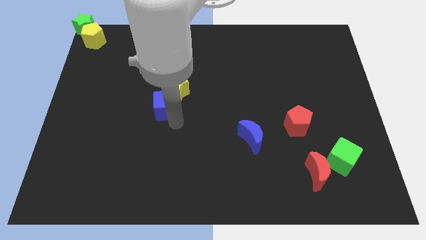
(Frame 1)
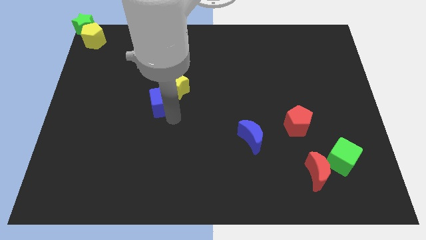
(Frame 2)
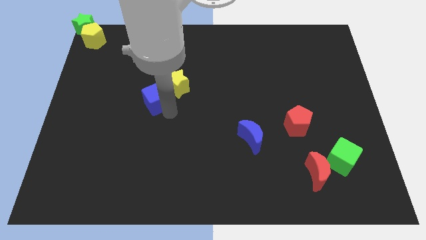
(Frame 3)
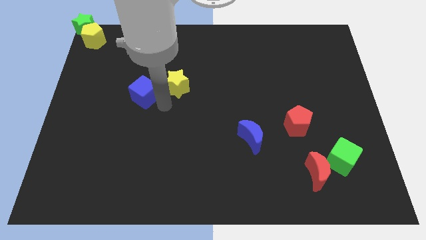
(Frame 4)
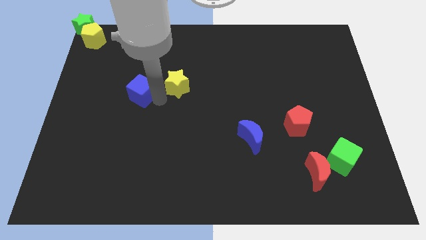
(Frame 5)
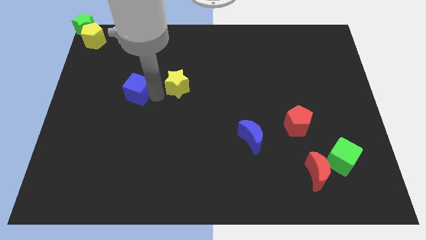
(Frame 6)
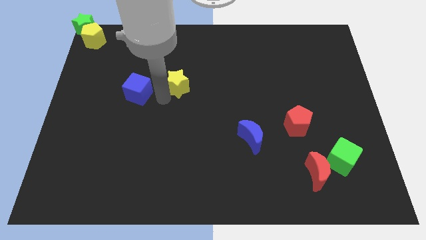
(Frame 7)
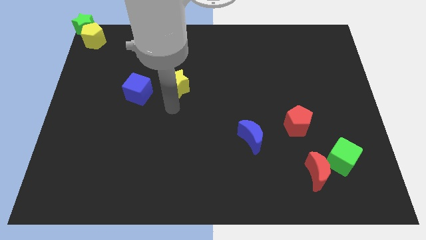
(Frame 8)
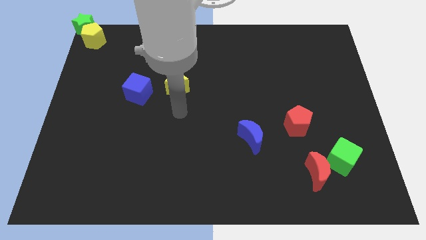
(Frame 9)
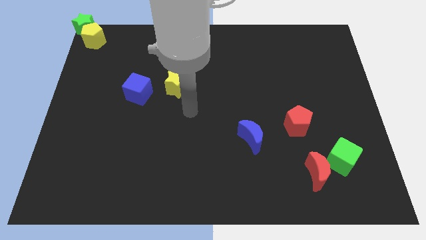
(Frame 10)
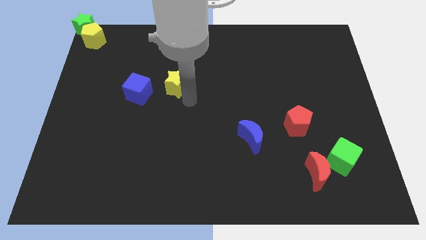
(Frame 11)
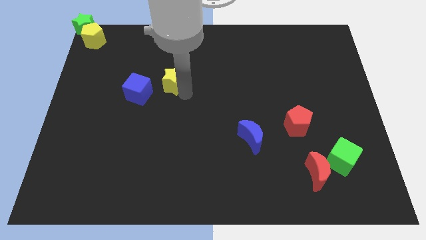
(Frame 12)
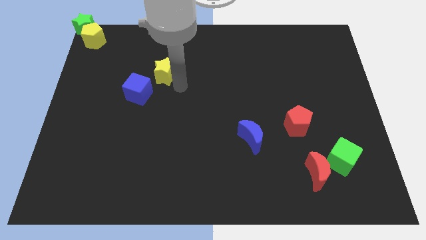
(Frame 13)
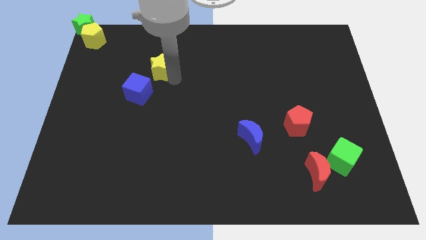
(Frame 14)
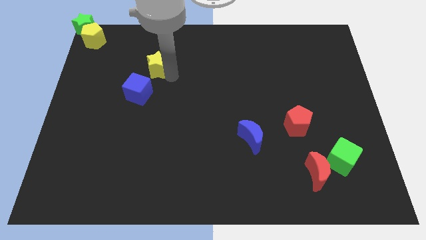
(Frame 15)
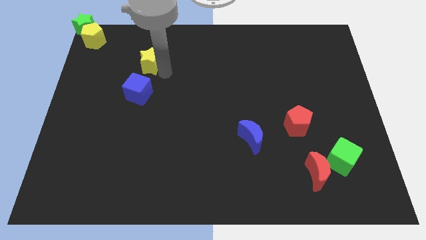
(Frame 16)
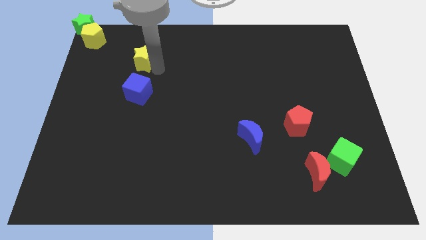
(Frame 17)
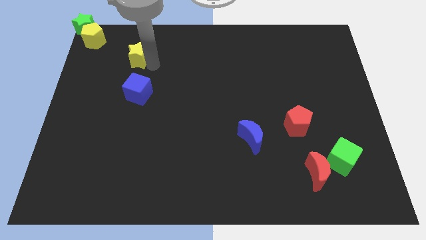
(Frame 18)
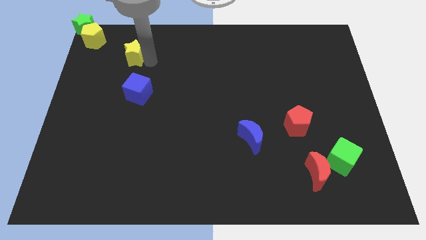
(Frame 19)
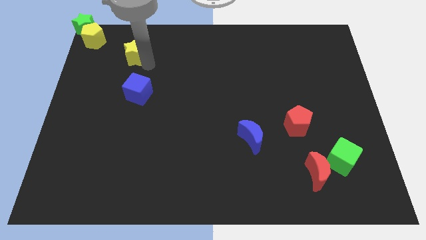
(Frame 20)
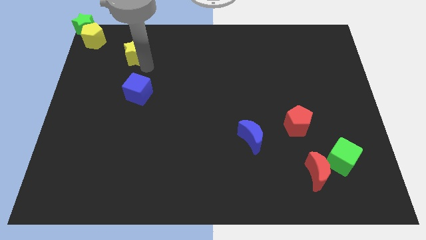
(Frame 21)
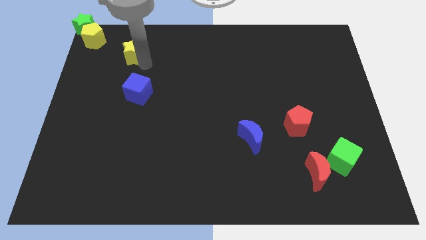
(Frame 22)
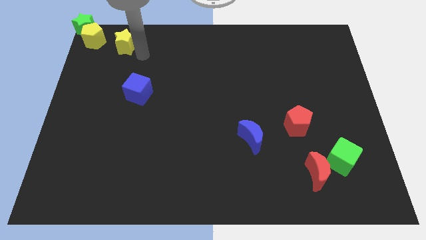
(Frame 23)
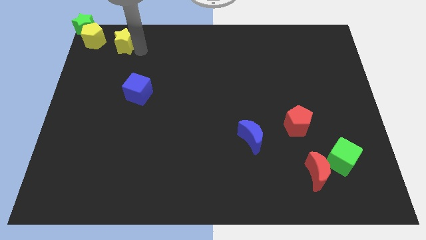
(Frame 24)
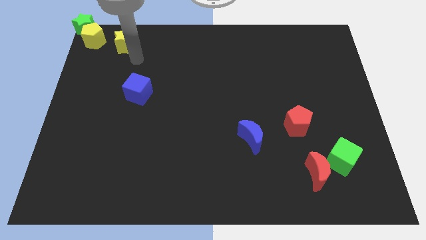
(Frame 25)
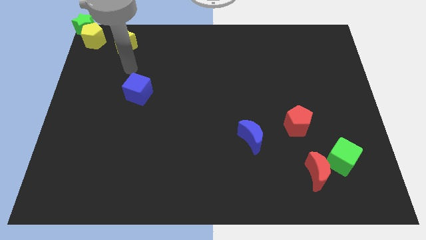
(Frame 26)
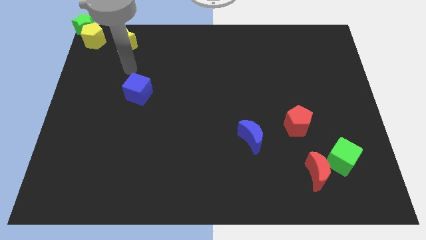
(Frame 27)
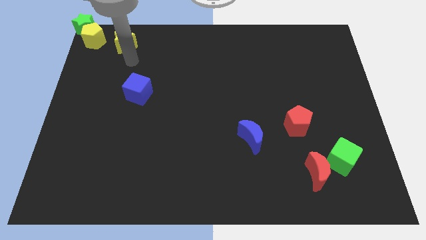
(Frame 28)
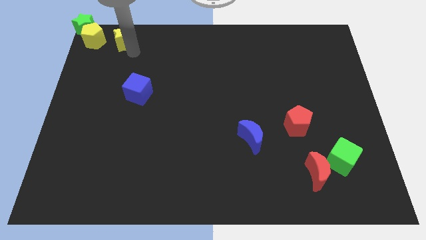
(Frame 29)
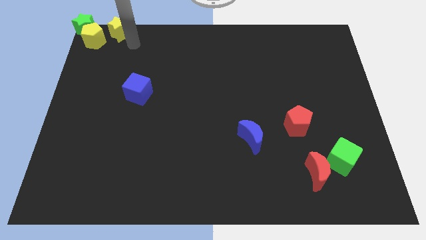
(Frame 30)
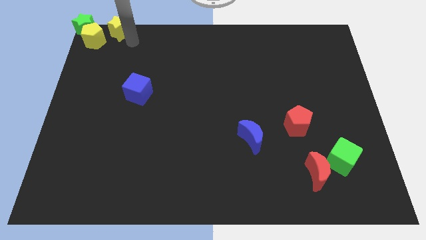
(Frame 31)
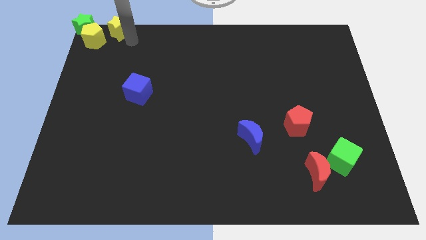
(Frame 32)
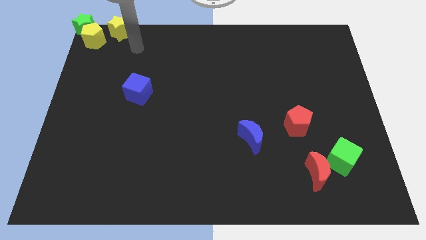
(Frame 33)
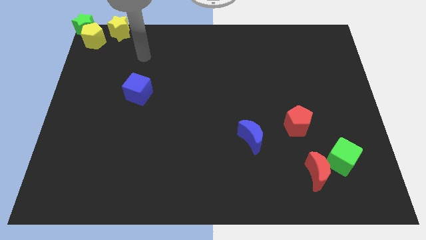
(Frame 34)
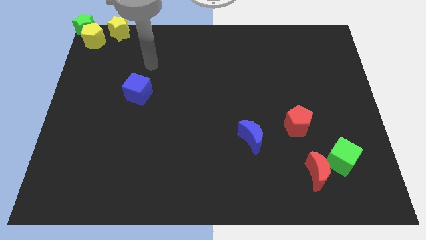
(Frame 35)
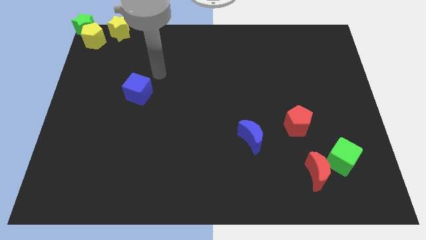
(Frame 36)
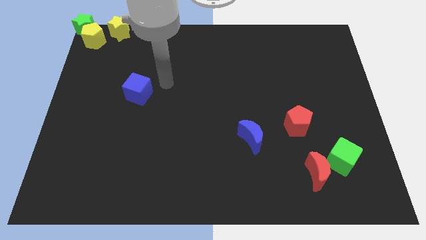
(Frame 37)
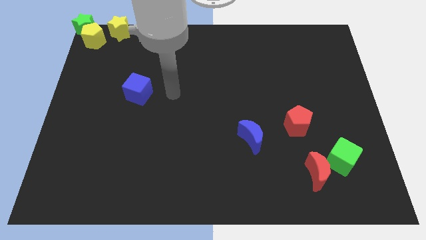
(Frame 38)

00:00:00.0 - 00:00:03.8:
place yellow star to the right of yellow pentagon

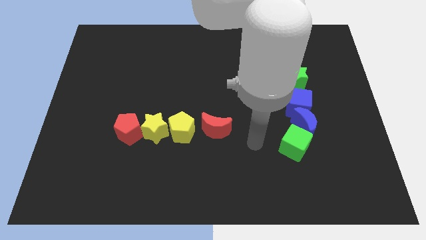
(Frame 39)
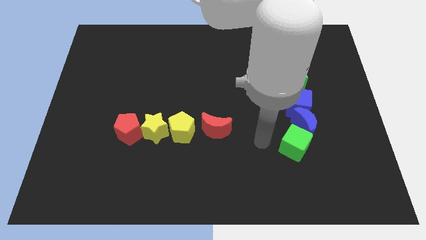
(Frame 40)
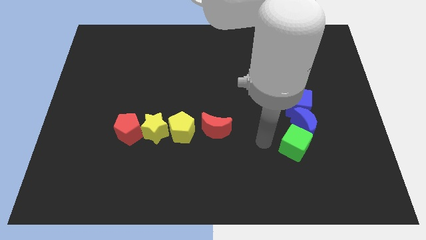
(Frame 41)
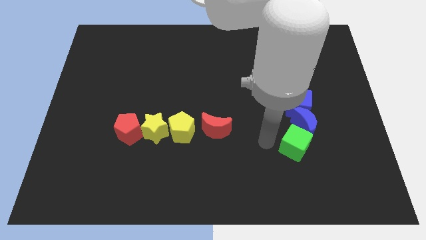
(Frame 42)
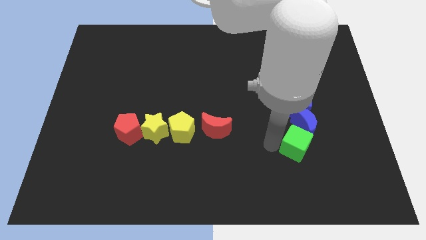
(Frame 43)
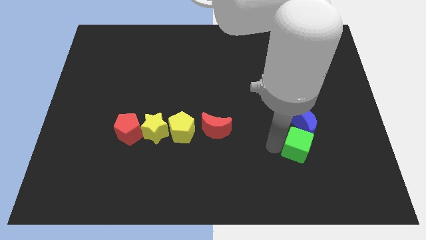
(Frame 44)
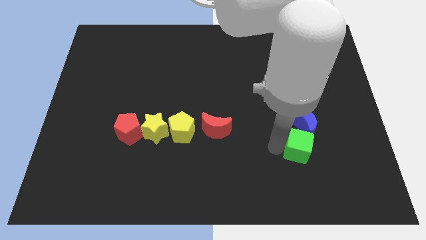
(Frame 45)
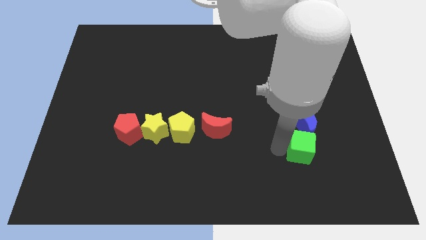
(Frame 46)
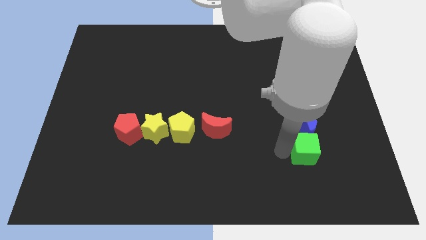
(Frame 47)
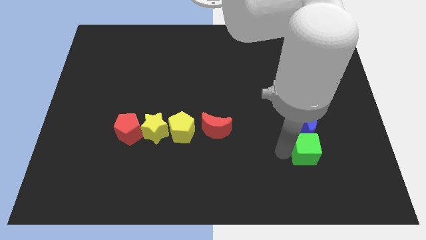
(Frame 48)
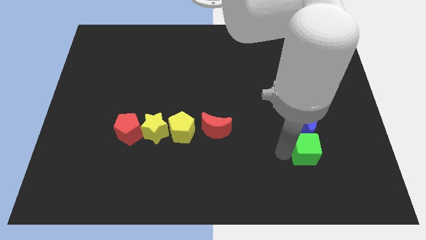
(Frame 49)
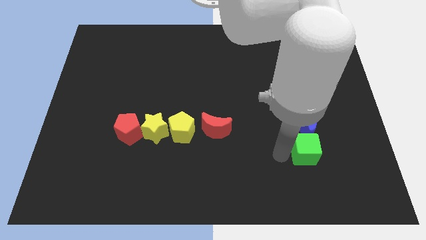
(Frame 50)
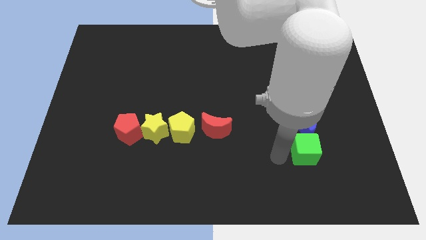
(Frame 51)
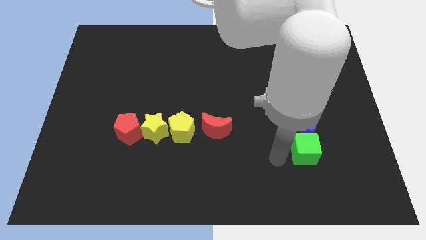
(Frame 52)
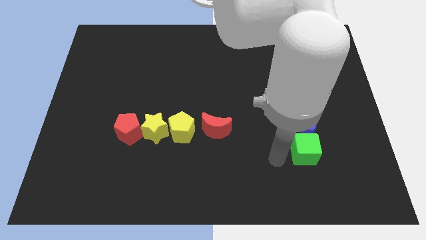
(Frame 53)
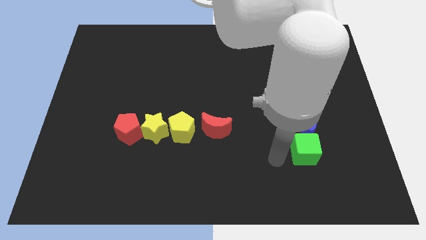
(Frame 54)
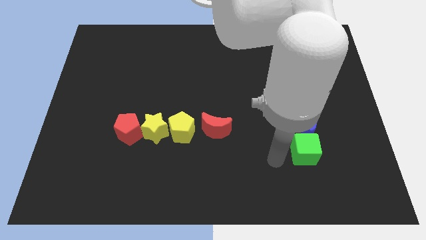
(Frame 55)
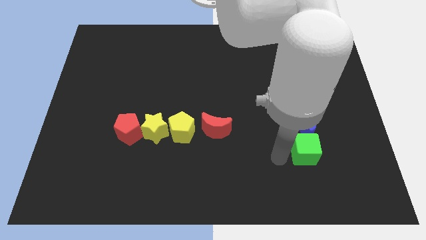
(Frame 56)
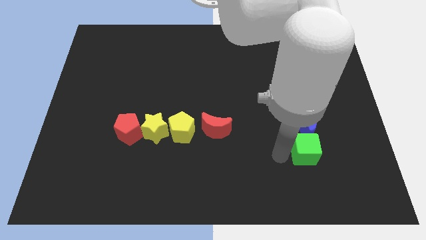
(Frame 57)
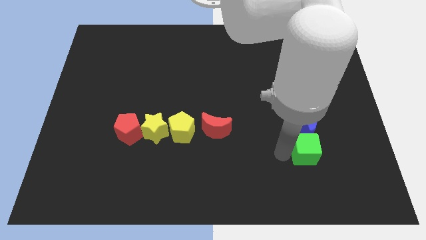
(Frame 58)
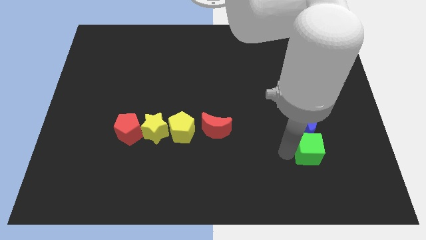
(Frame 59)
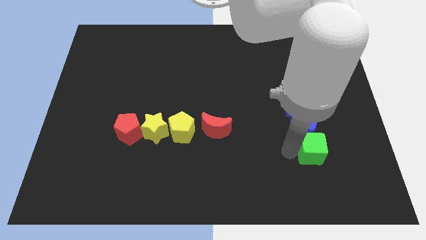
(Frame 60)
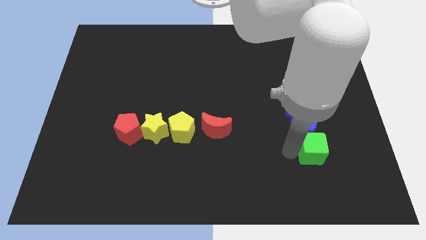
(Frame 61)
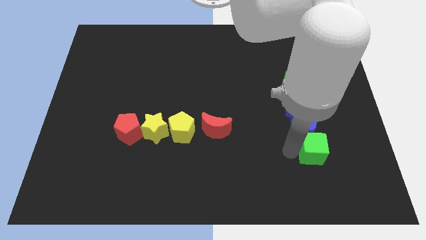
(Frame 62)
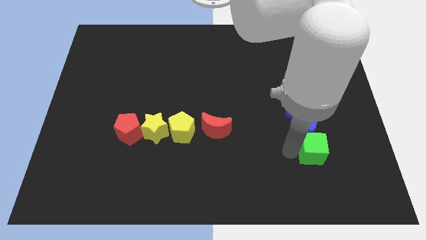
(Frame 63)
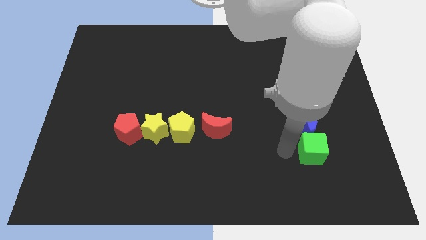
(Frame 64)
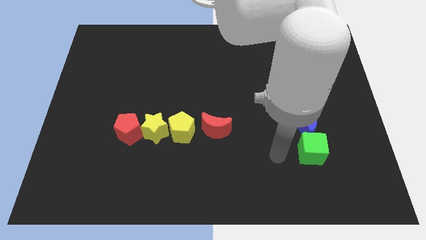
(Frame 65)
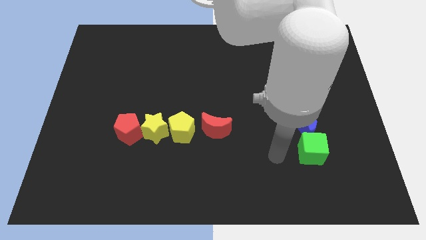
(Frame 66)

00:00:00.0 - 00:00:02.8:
move green cube slightly right

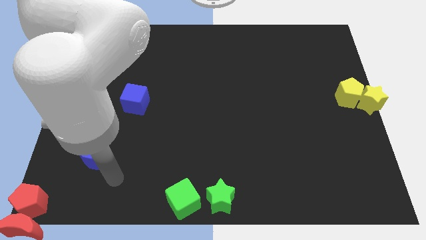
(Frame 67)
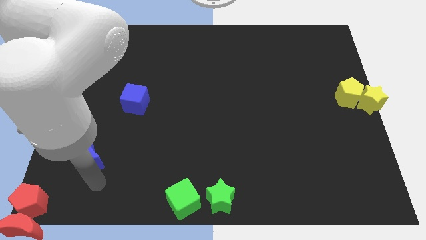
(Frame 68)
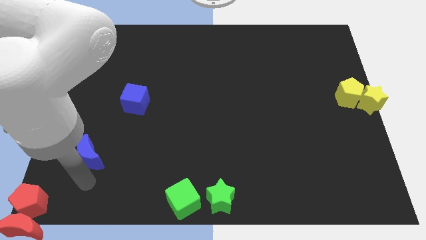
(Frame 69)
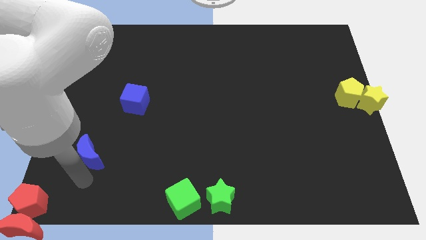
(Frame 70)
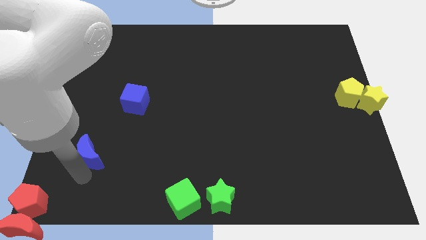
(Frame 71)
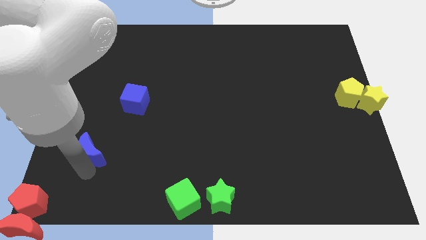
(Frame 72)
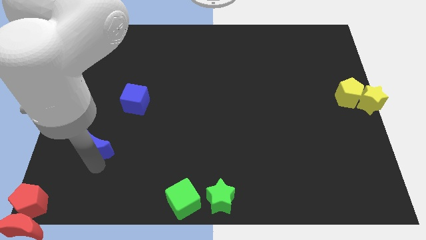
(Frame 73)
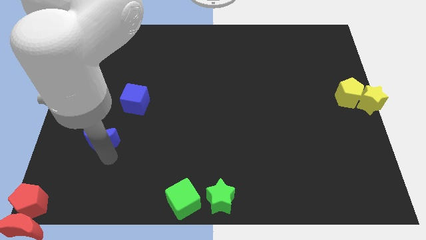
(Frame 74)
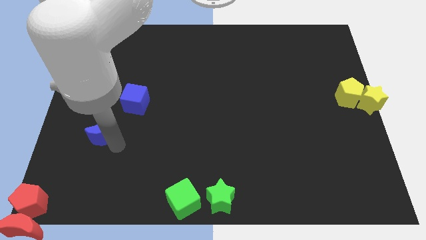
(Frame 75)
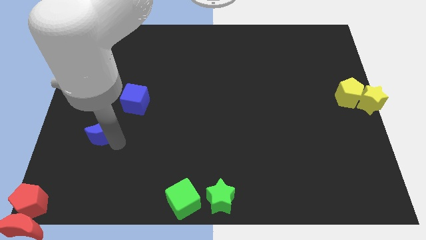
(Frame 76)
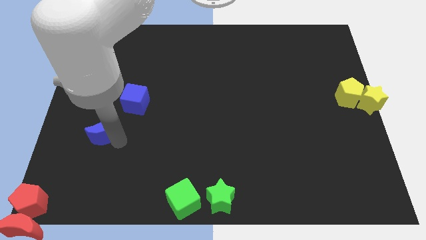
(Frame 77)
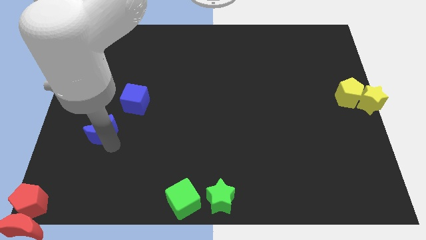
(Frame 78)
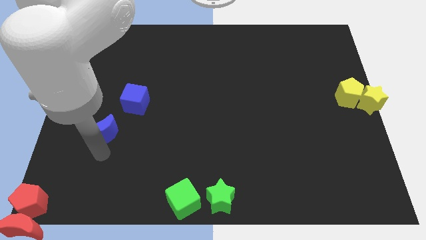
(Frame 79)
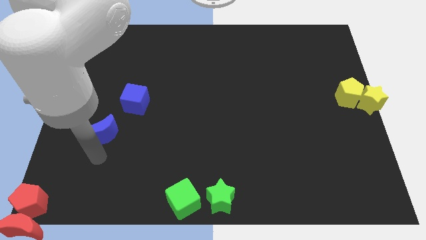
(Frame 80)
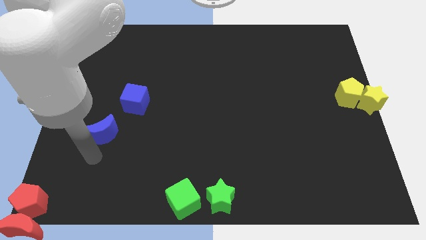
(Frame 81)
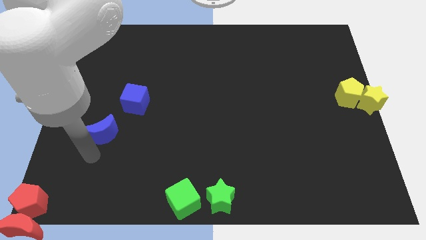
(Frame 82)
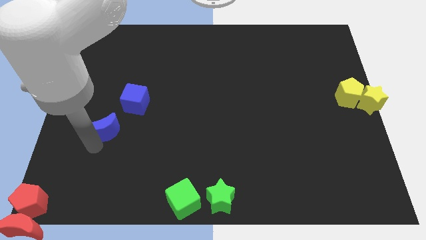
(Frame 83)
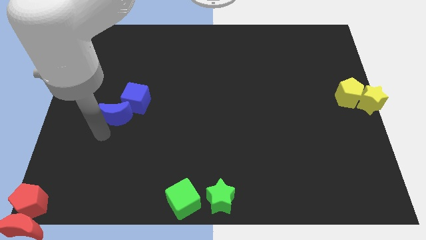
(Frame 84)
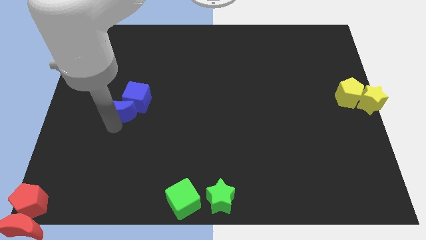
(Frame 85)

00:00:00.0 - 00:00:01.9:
move the blue moon to the bottom left side of the blue cube

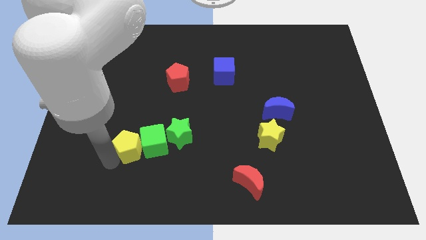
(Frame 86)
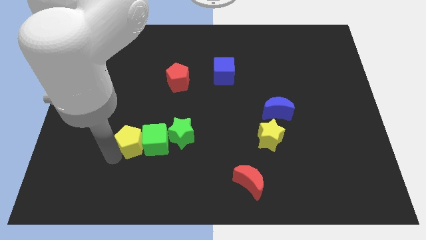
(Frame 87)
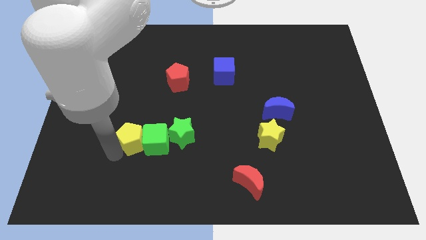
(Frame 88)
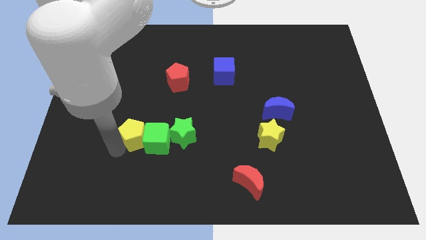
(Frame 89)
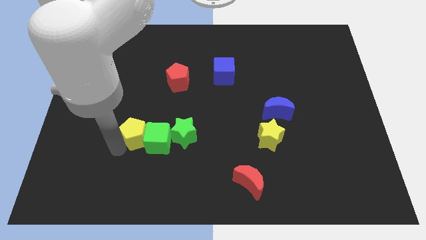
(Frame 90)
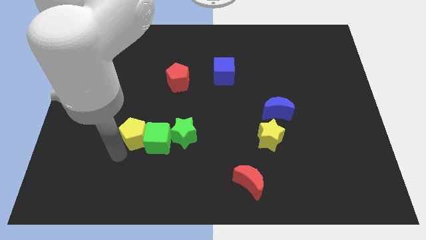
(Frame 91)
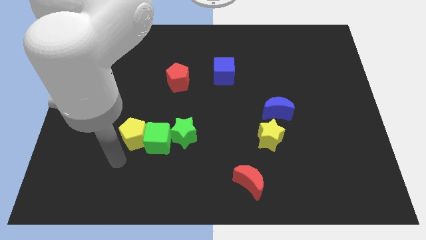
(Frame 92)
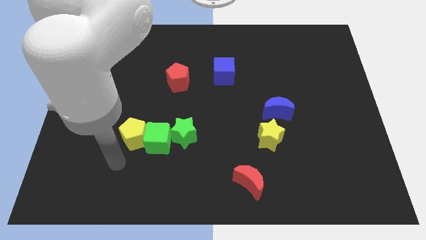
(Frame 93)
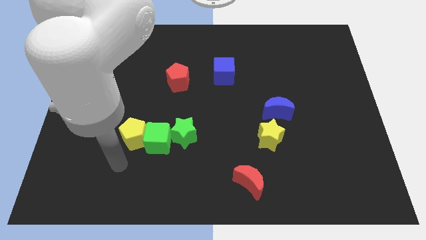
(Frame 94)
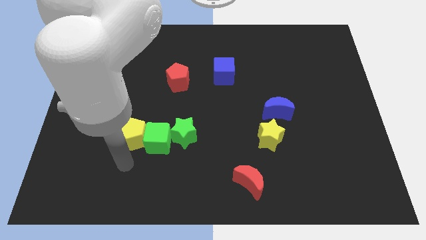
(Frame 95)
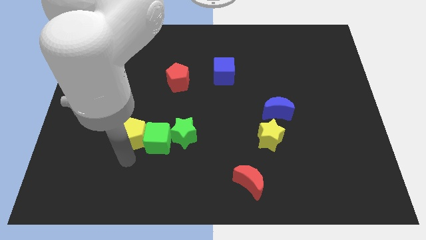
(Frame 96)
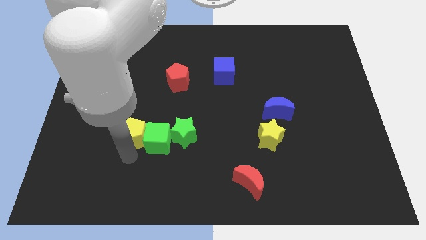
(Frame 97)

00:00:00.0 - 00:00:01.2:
move the yellow pentagon to the top of the board
